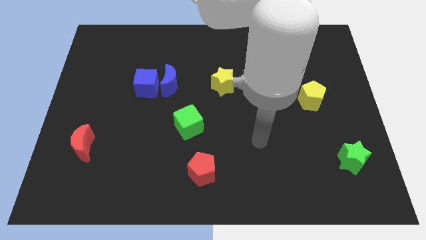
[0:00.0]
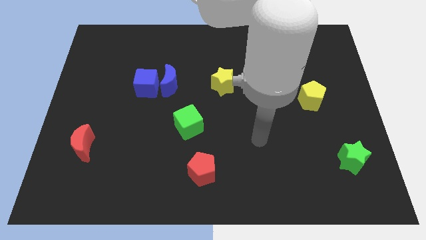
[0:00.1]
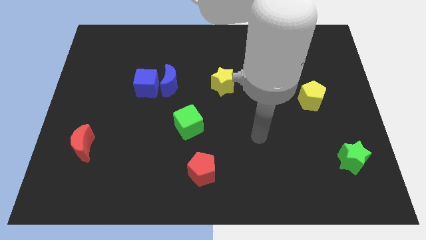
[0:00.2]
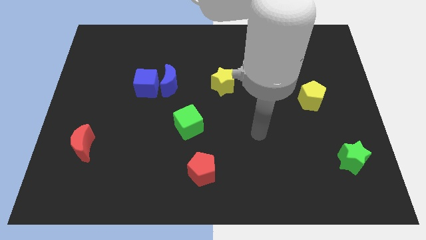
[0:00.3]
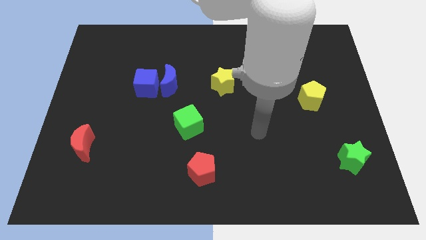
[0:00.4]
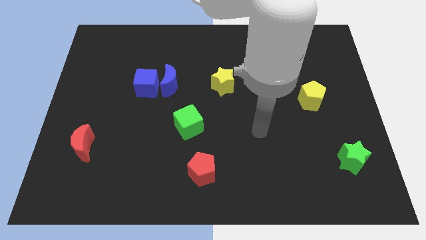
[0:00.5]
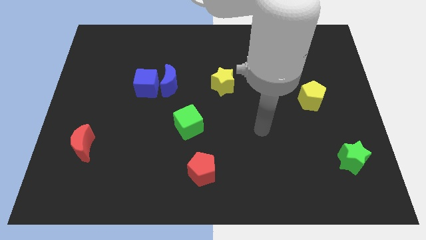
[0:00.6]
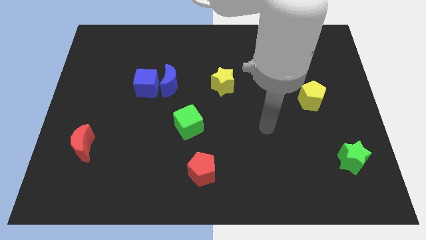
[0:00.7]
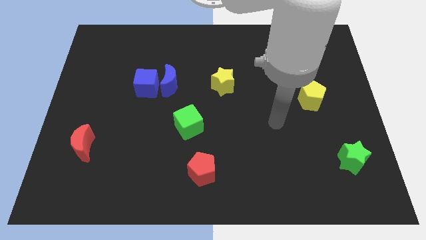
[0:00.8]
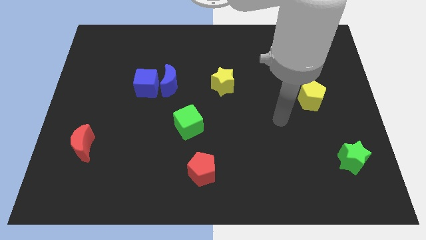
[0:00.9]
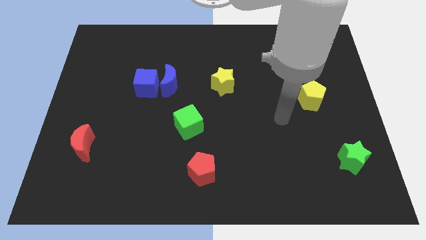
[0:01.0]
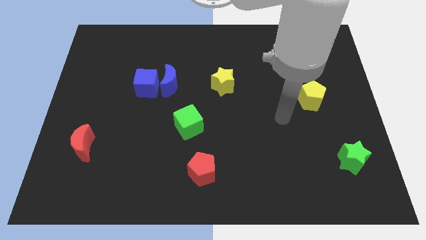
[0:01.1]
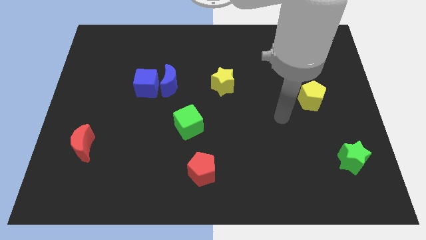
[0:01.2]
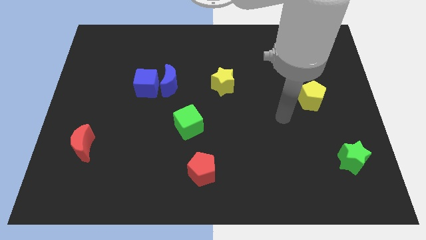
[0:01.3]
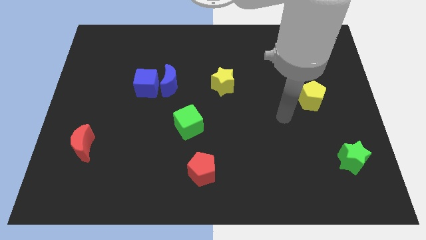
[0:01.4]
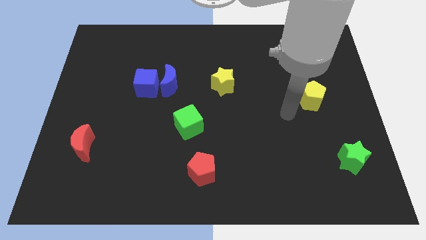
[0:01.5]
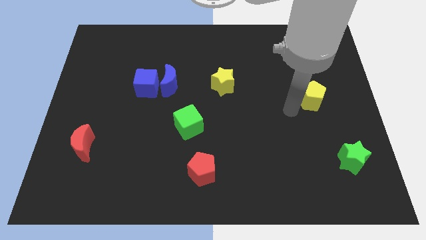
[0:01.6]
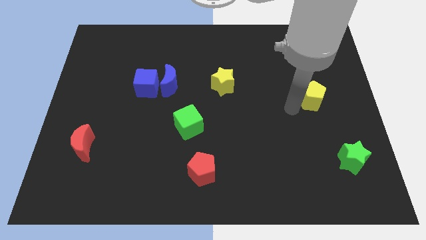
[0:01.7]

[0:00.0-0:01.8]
point your arm close to yellow pentagon

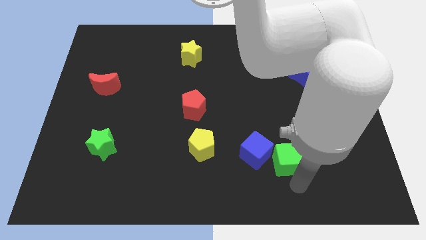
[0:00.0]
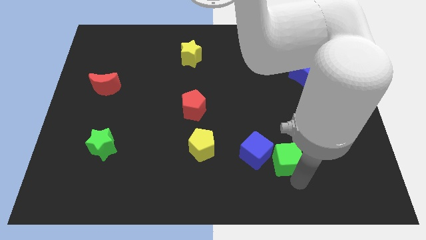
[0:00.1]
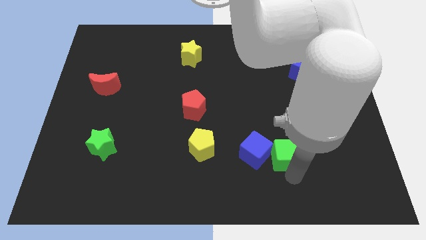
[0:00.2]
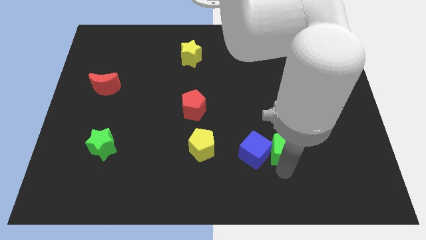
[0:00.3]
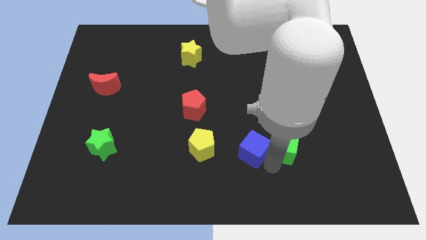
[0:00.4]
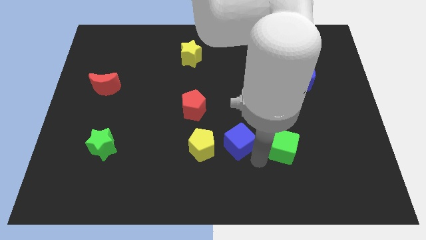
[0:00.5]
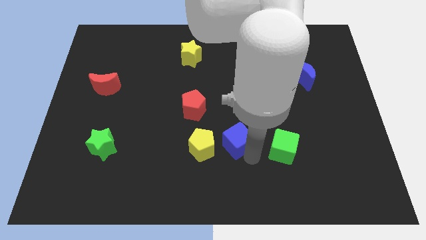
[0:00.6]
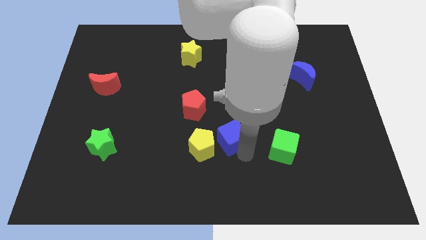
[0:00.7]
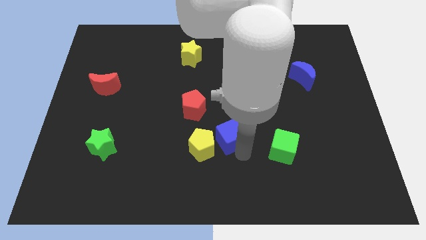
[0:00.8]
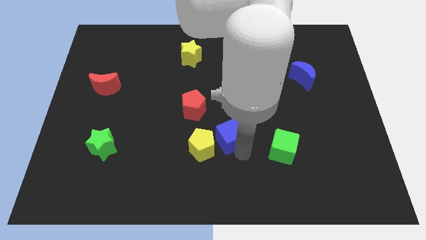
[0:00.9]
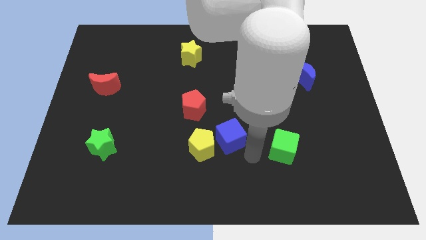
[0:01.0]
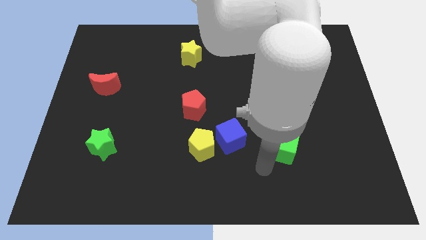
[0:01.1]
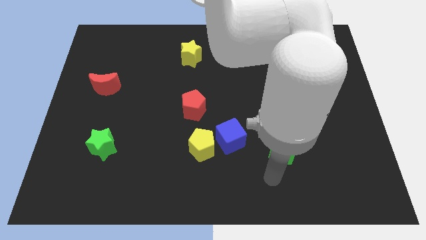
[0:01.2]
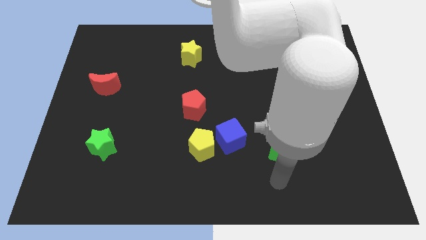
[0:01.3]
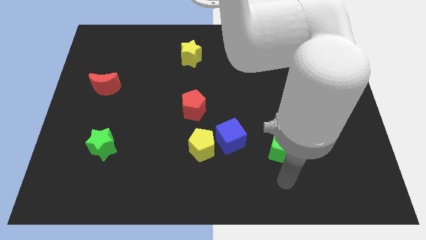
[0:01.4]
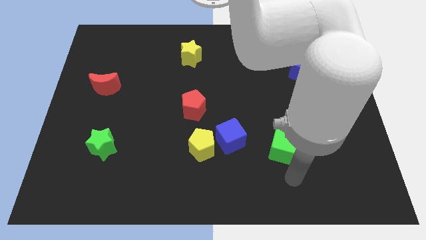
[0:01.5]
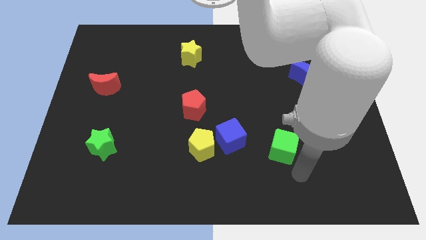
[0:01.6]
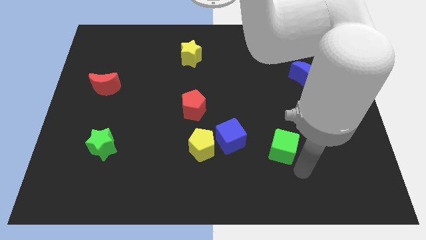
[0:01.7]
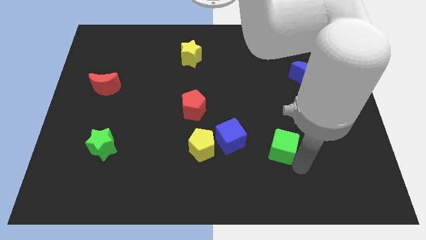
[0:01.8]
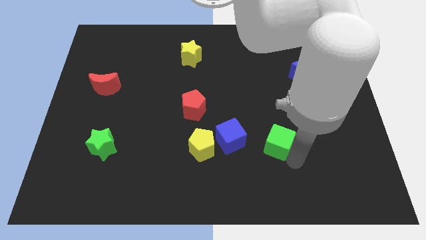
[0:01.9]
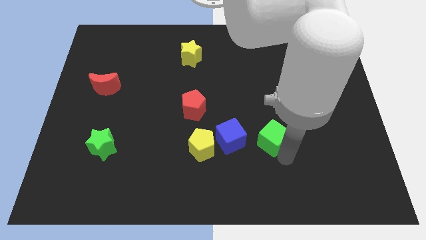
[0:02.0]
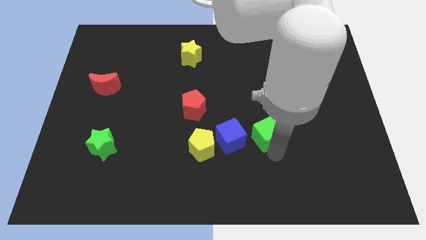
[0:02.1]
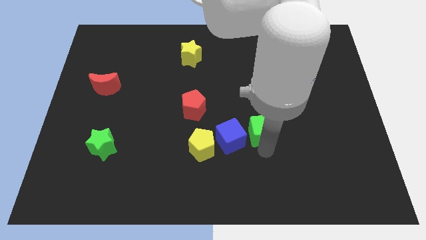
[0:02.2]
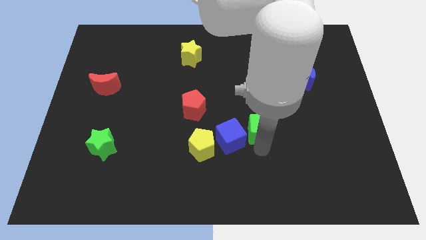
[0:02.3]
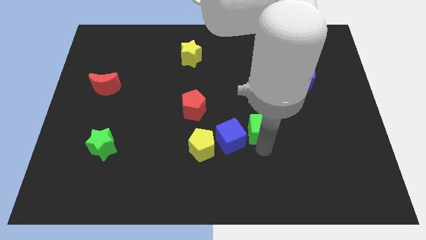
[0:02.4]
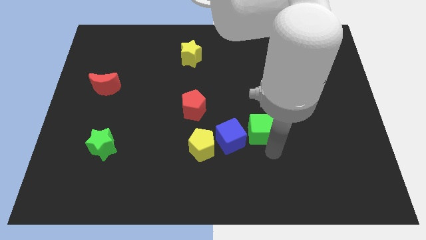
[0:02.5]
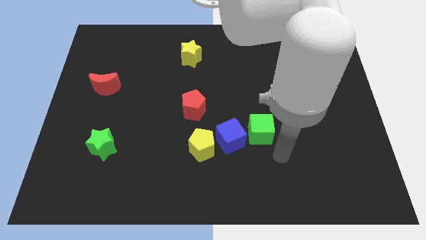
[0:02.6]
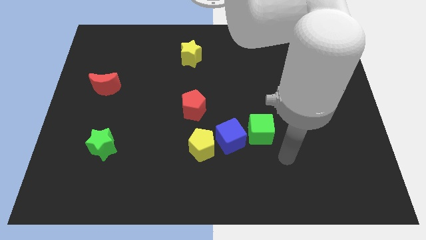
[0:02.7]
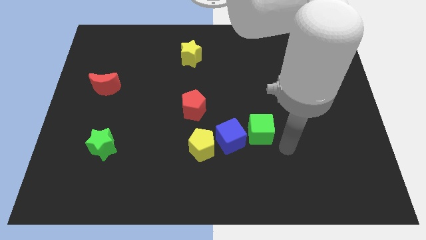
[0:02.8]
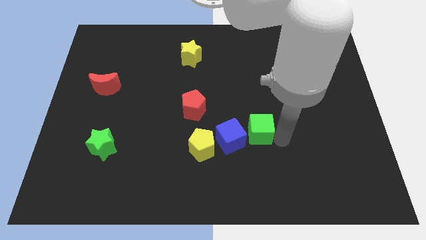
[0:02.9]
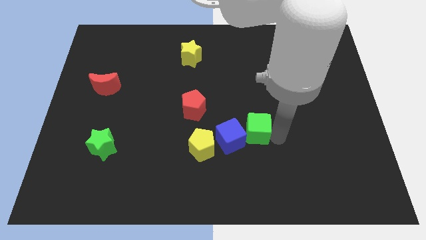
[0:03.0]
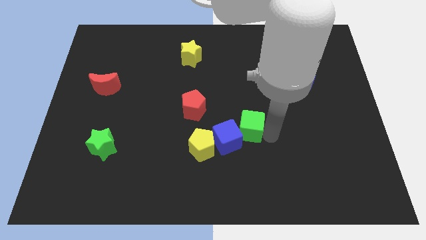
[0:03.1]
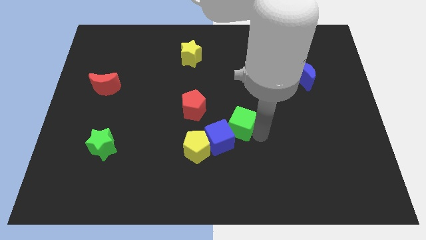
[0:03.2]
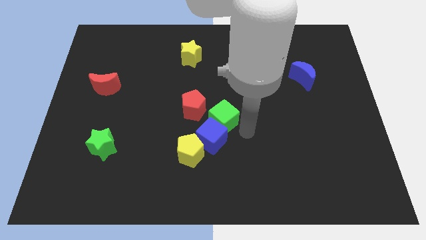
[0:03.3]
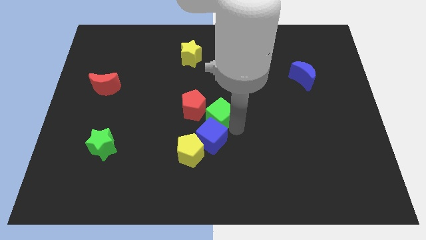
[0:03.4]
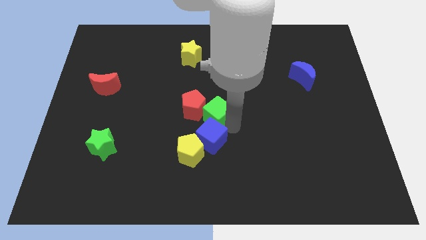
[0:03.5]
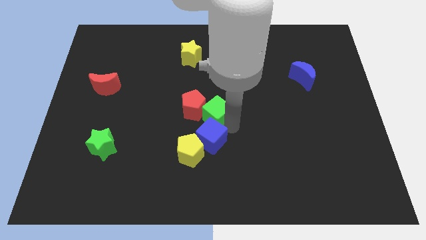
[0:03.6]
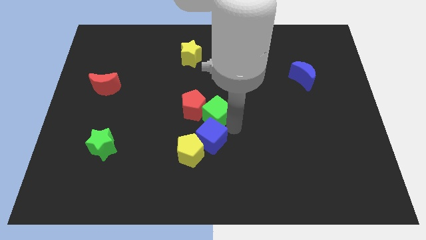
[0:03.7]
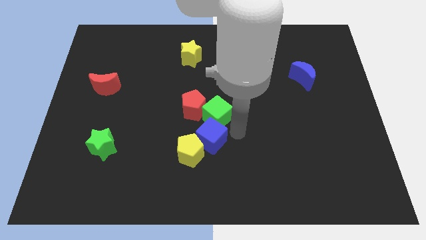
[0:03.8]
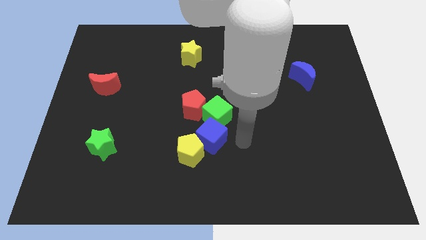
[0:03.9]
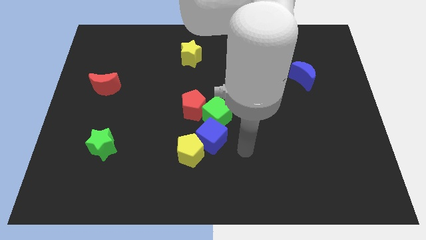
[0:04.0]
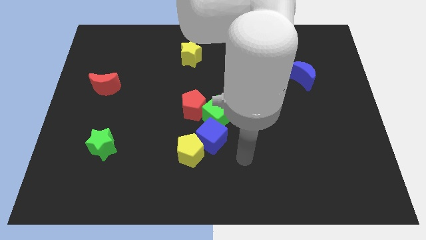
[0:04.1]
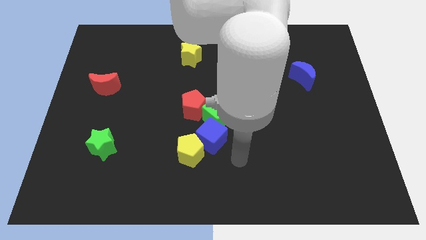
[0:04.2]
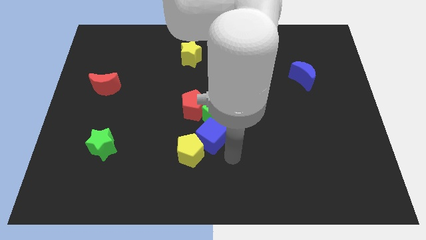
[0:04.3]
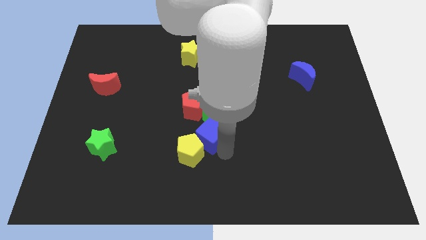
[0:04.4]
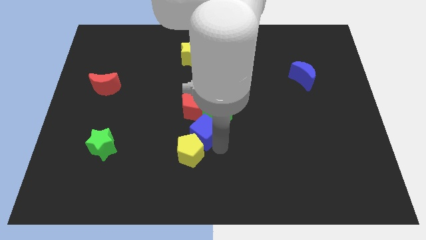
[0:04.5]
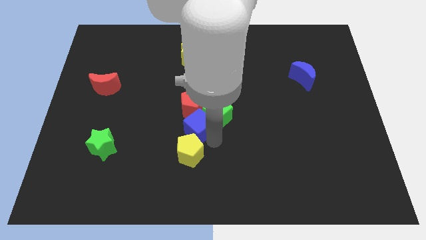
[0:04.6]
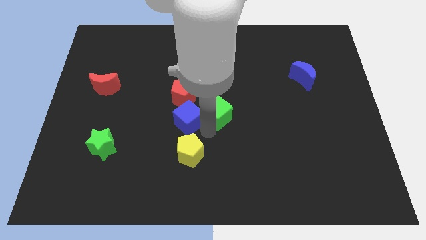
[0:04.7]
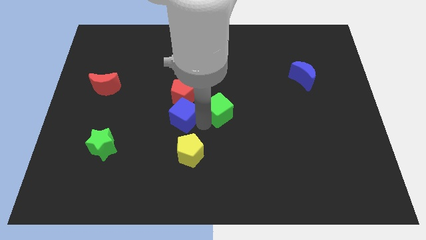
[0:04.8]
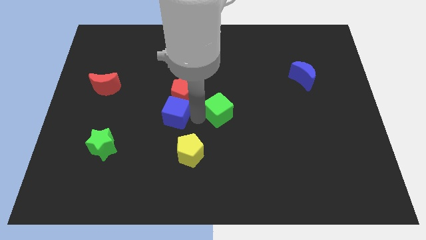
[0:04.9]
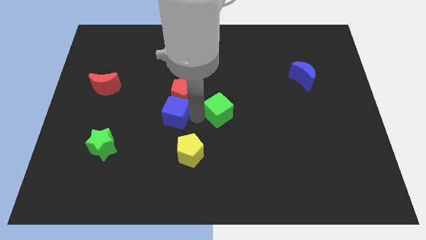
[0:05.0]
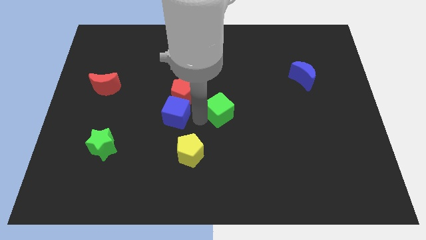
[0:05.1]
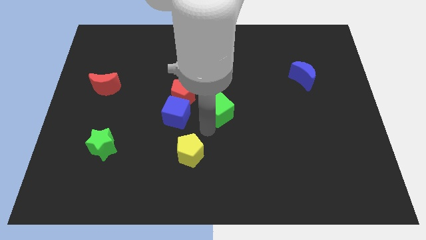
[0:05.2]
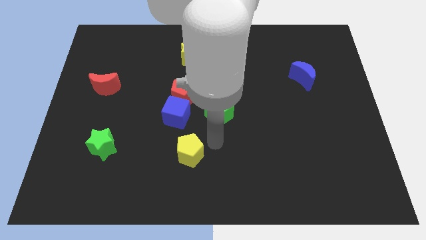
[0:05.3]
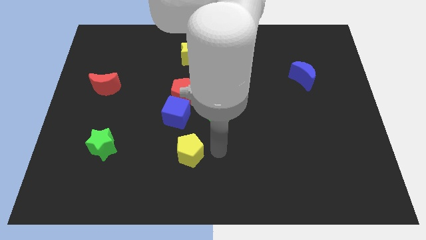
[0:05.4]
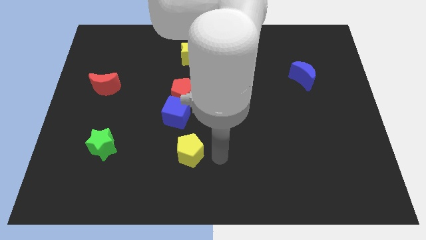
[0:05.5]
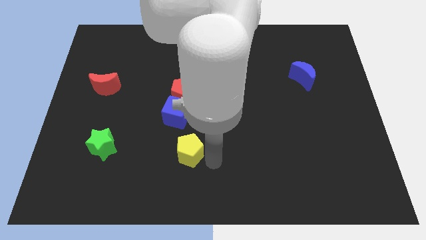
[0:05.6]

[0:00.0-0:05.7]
push the blue cube into the red pentagon

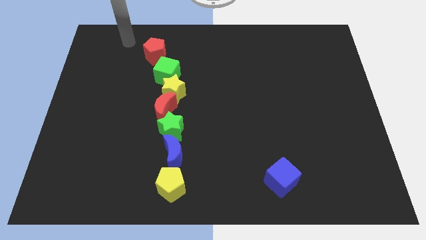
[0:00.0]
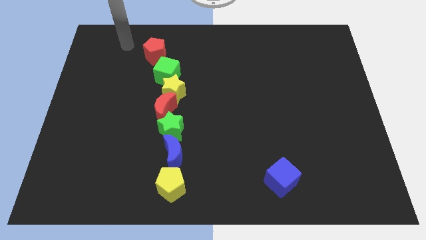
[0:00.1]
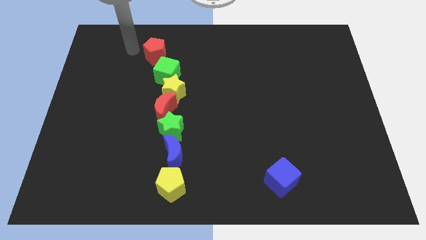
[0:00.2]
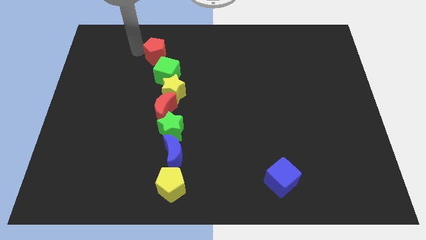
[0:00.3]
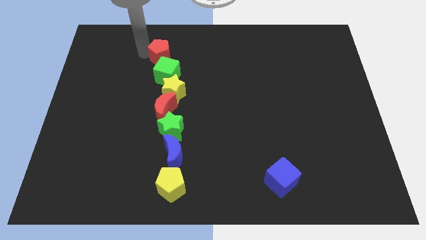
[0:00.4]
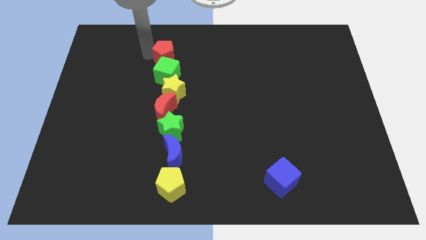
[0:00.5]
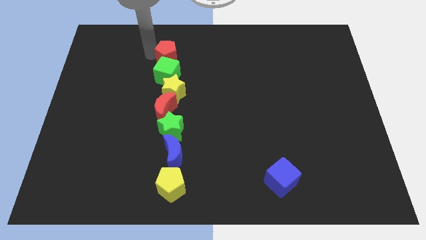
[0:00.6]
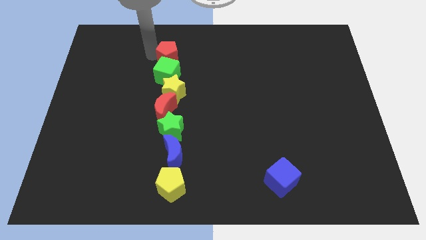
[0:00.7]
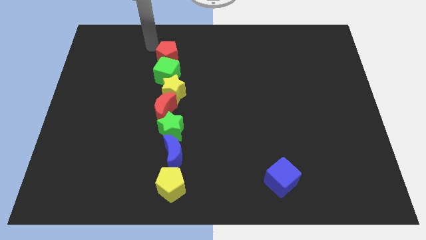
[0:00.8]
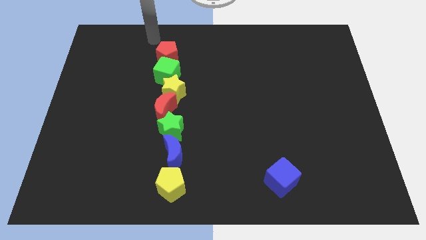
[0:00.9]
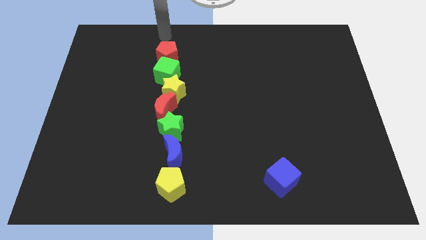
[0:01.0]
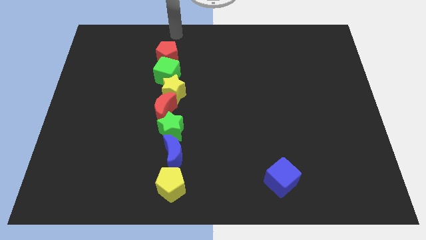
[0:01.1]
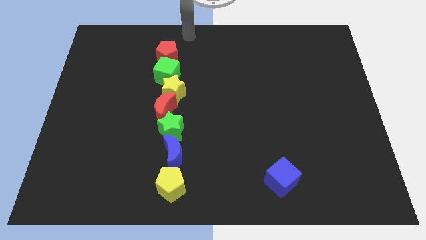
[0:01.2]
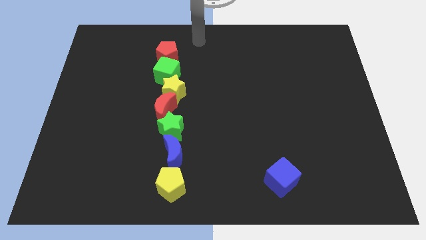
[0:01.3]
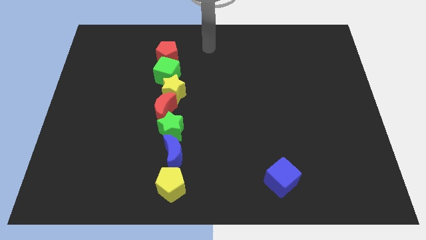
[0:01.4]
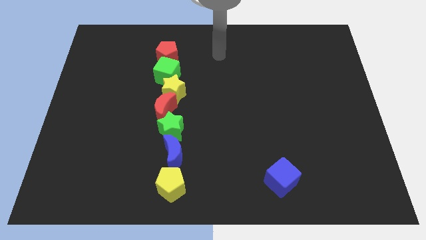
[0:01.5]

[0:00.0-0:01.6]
push red pentagon into the green cube
